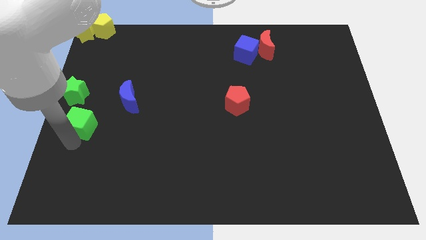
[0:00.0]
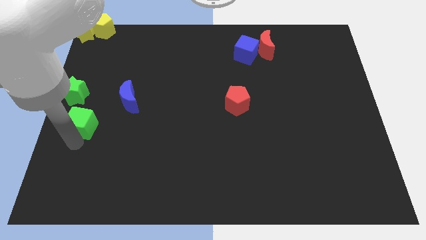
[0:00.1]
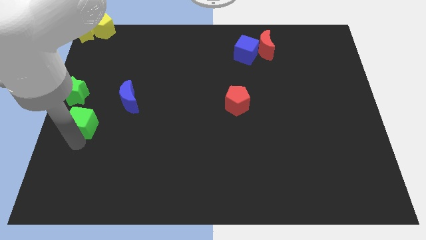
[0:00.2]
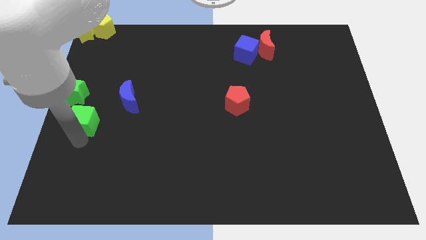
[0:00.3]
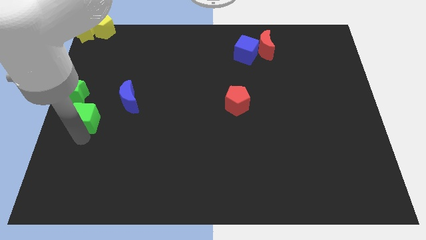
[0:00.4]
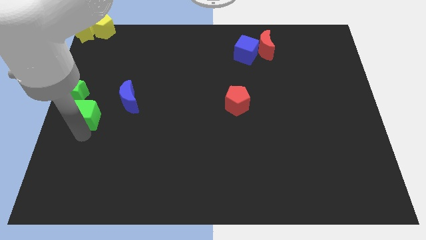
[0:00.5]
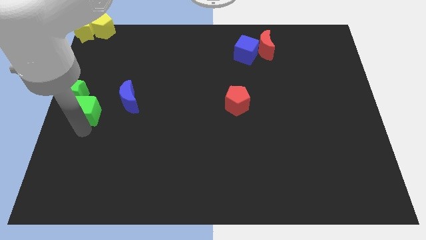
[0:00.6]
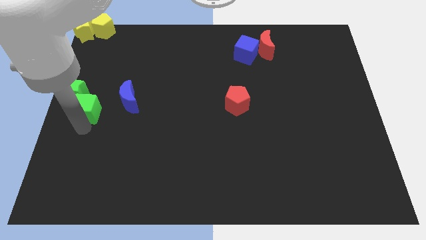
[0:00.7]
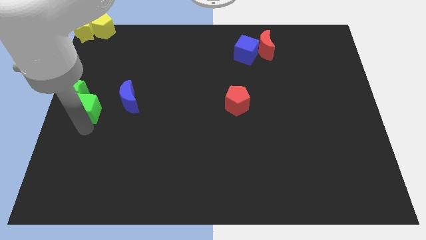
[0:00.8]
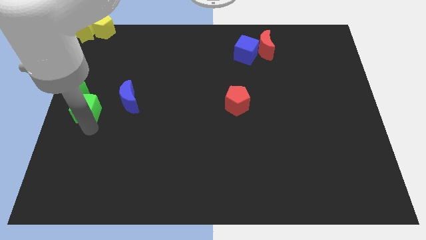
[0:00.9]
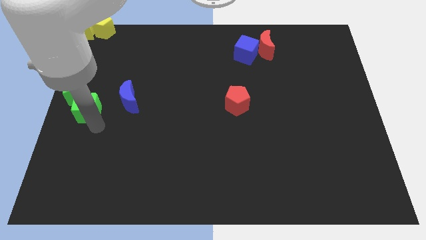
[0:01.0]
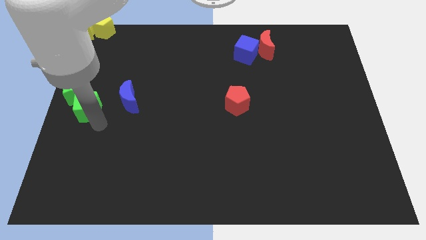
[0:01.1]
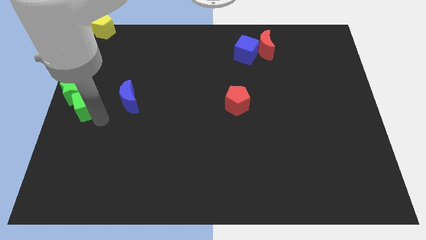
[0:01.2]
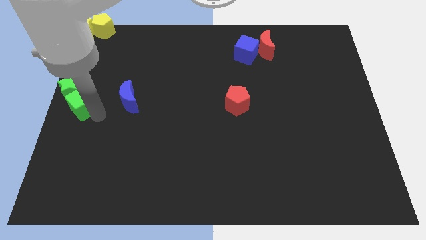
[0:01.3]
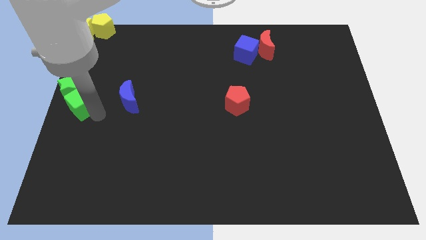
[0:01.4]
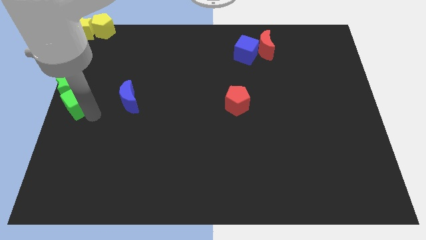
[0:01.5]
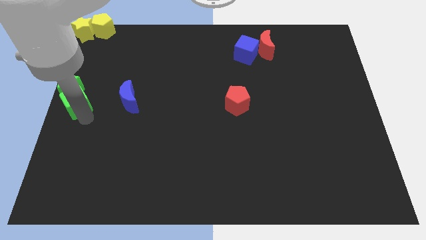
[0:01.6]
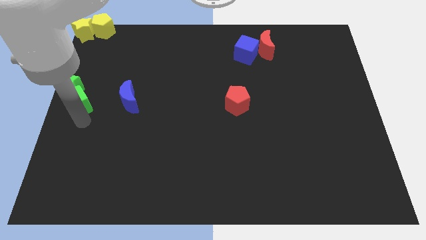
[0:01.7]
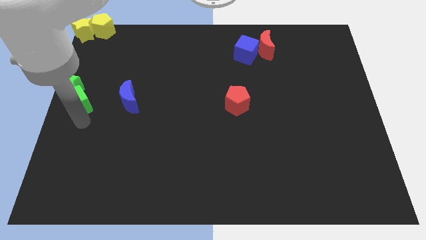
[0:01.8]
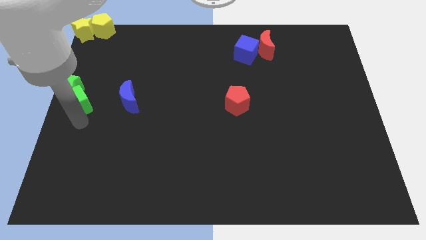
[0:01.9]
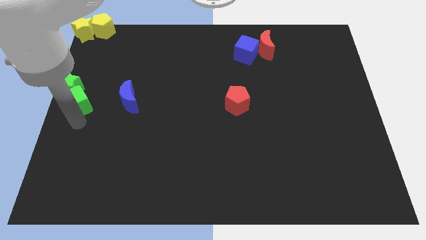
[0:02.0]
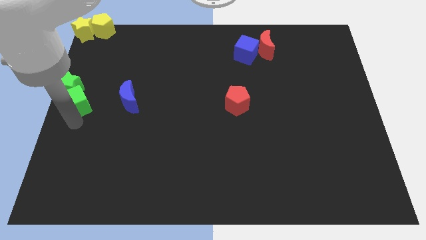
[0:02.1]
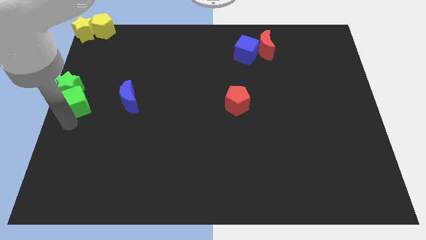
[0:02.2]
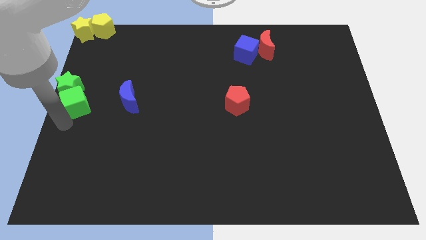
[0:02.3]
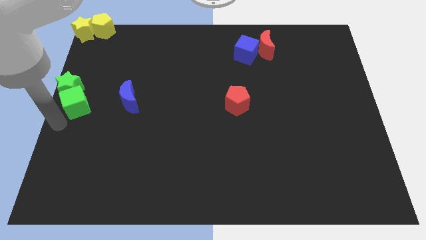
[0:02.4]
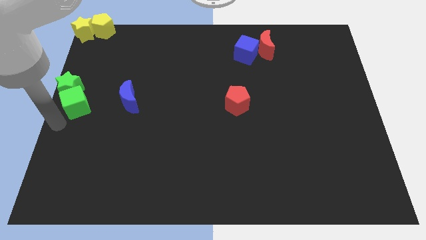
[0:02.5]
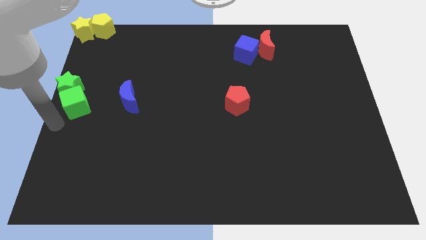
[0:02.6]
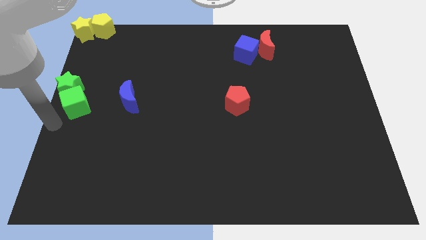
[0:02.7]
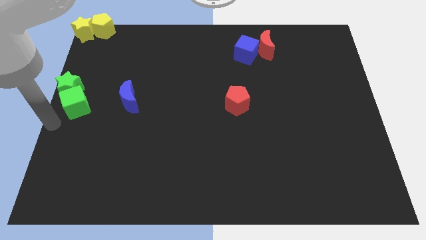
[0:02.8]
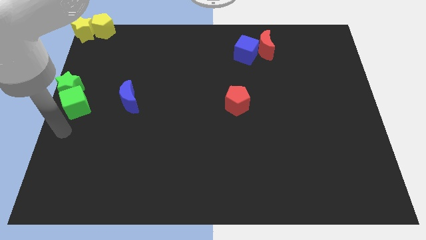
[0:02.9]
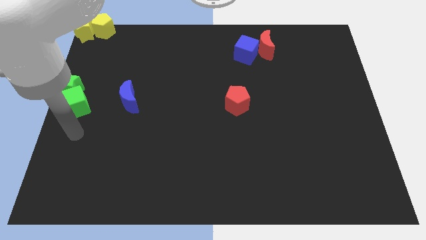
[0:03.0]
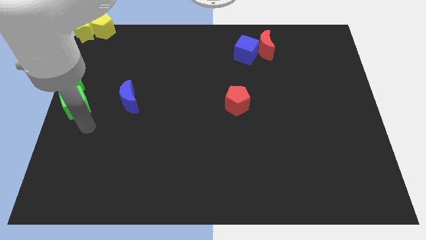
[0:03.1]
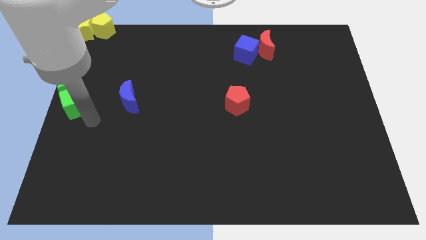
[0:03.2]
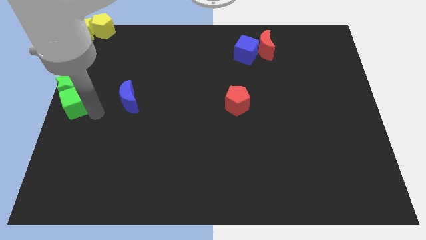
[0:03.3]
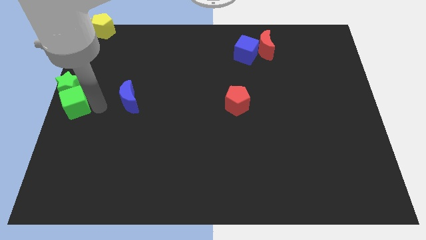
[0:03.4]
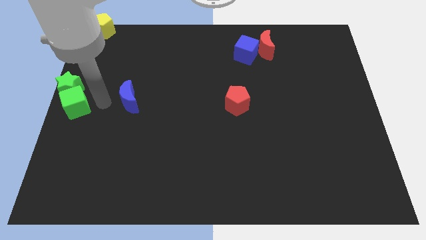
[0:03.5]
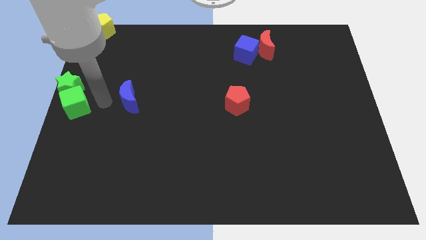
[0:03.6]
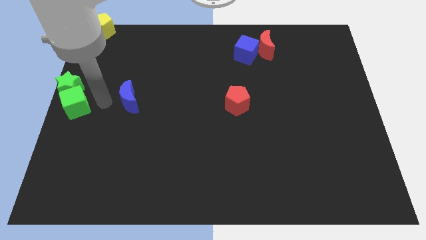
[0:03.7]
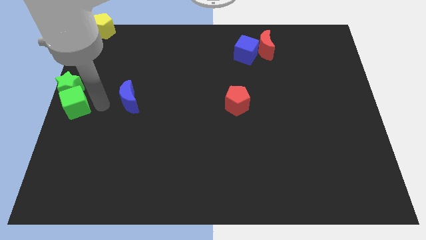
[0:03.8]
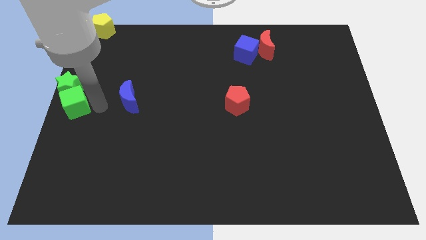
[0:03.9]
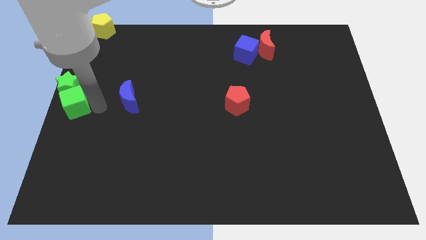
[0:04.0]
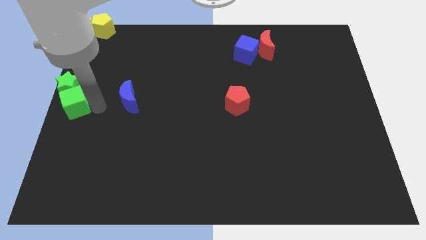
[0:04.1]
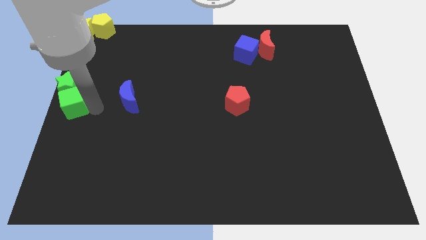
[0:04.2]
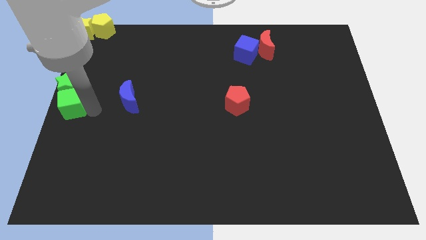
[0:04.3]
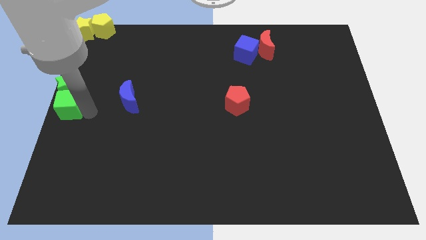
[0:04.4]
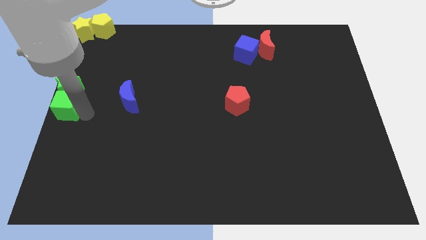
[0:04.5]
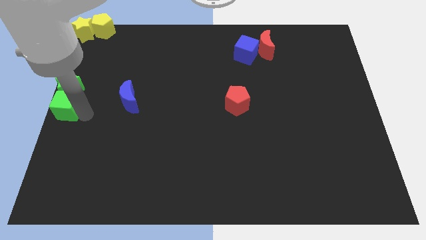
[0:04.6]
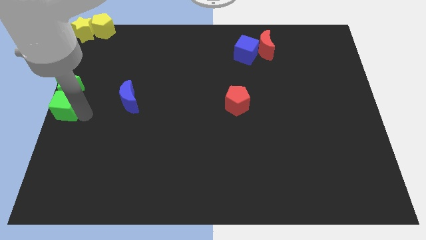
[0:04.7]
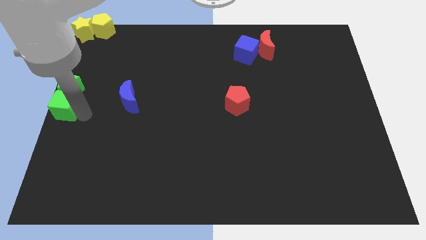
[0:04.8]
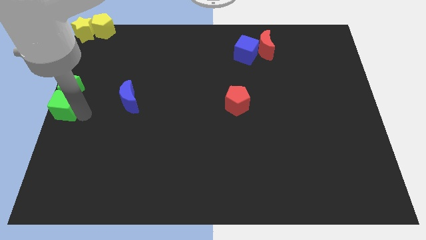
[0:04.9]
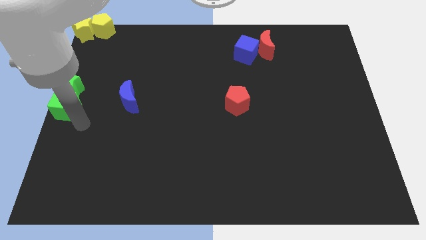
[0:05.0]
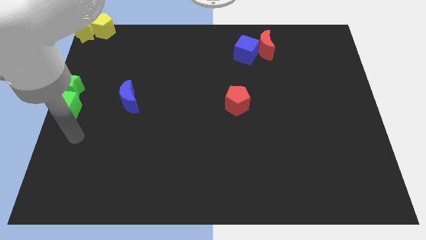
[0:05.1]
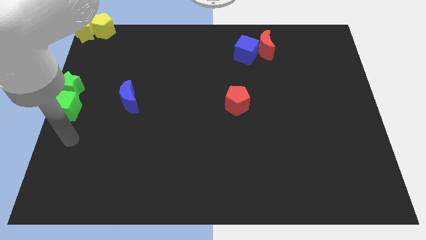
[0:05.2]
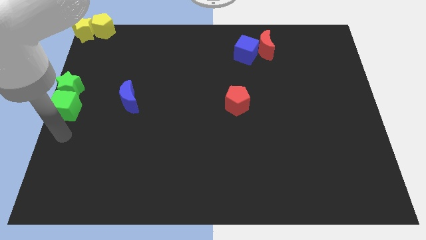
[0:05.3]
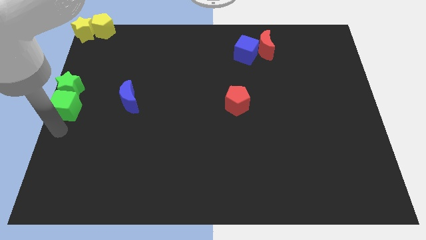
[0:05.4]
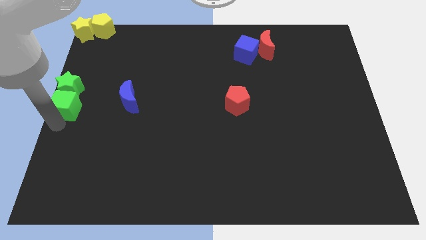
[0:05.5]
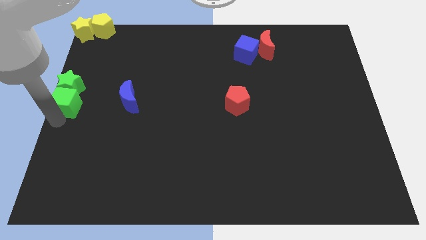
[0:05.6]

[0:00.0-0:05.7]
move the green cube at the bottom of the green star green star

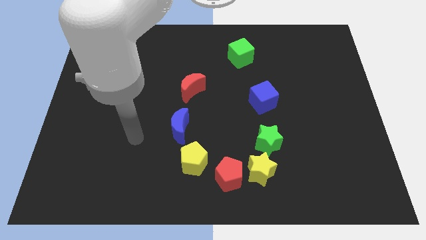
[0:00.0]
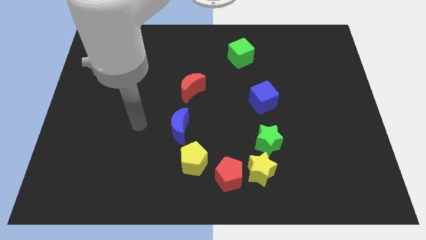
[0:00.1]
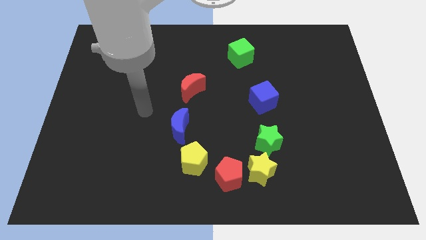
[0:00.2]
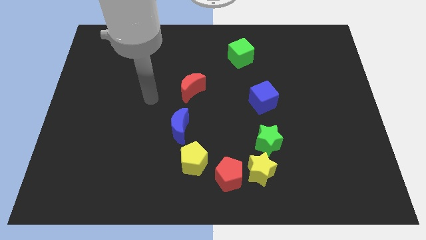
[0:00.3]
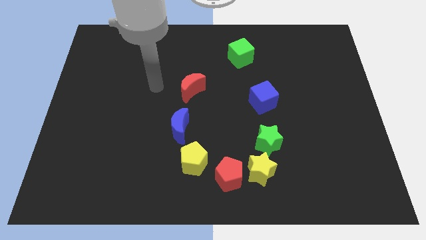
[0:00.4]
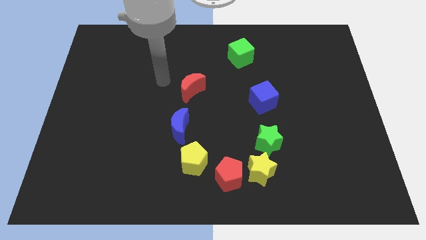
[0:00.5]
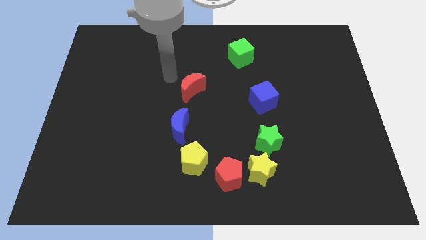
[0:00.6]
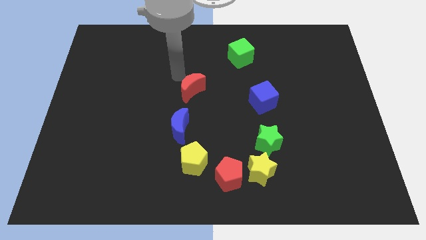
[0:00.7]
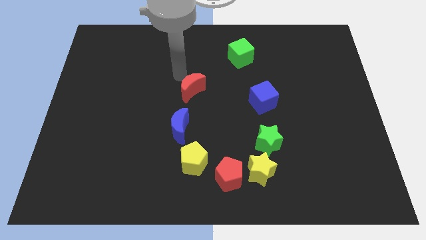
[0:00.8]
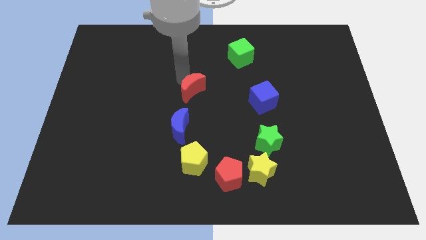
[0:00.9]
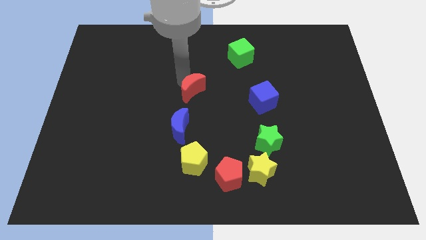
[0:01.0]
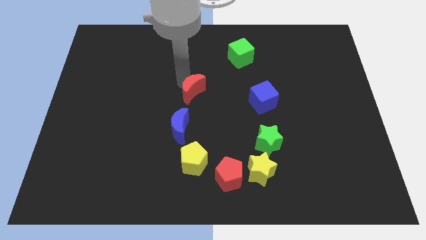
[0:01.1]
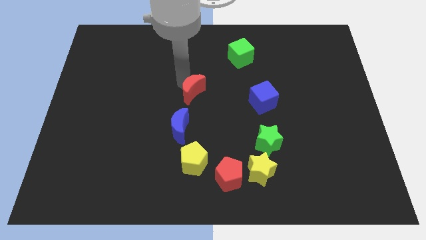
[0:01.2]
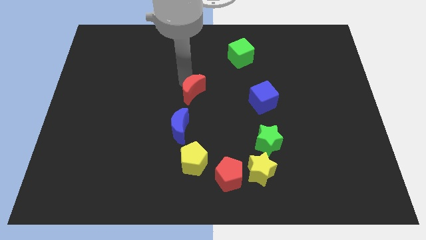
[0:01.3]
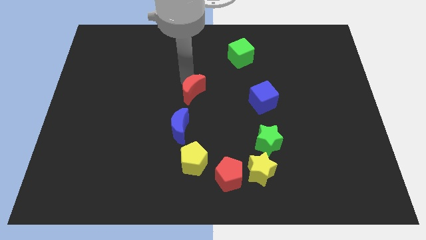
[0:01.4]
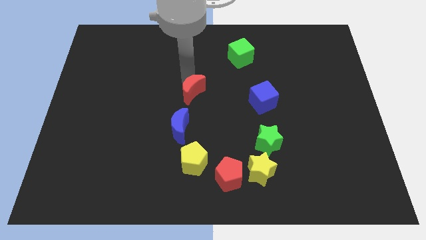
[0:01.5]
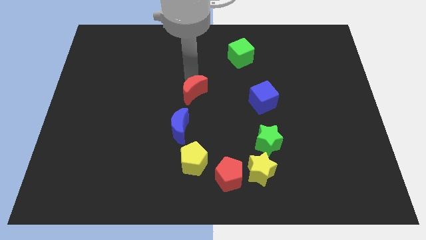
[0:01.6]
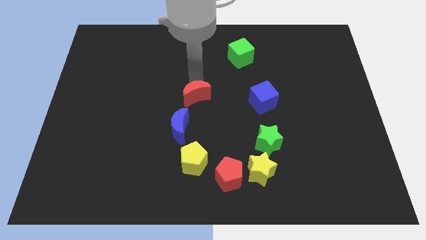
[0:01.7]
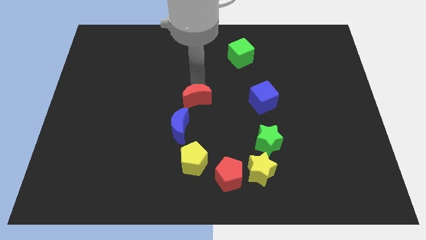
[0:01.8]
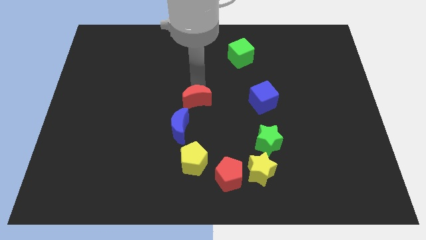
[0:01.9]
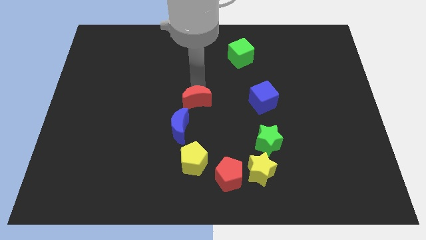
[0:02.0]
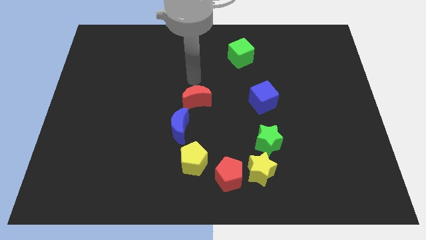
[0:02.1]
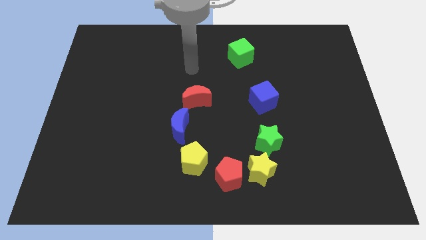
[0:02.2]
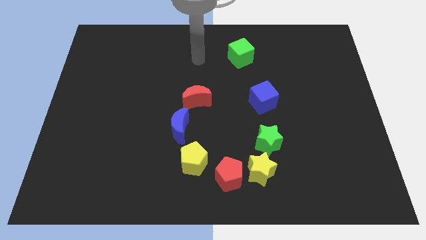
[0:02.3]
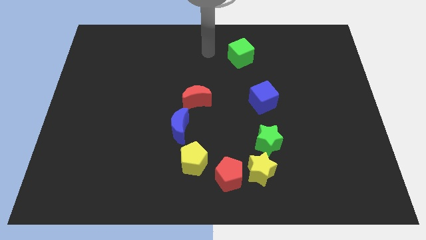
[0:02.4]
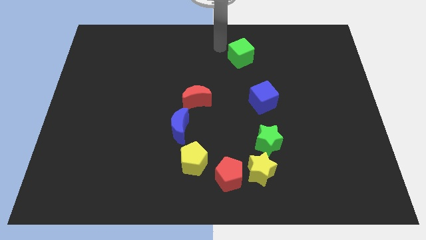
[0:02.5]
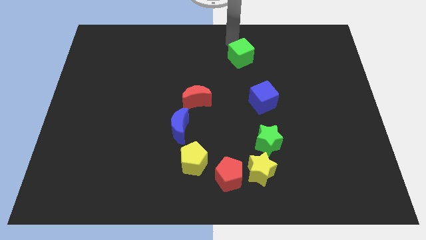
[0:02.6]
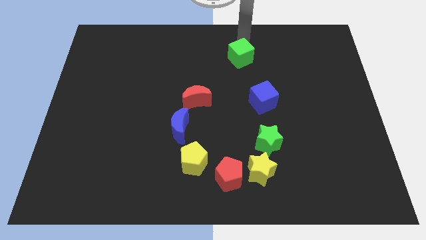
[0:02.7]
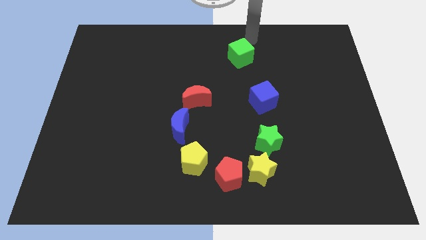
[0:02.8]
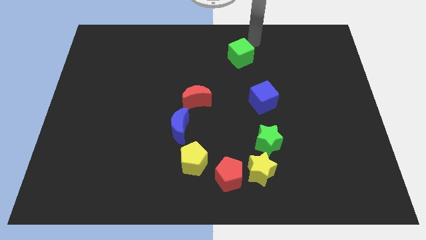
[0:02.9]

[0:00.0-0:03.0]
move the red crescent slightly close to the blue moon

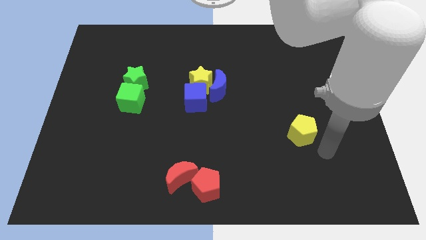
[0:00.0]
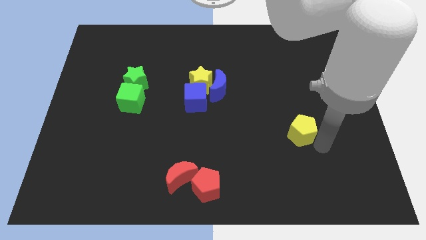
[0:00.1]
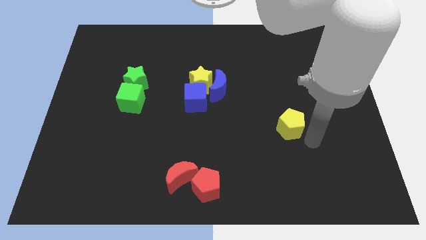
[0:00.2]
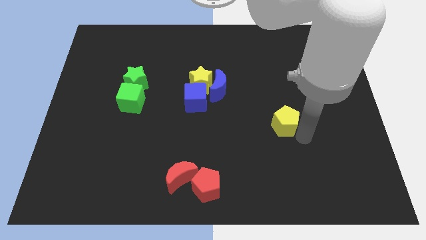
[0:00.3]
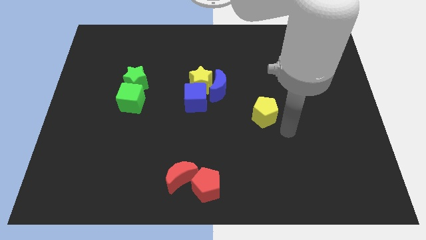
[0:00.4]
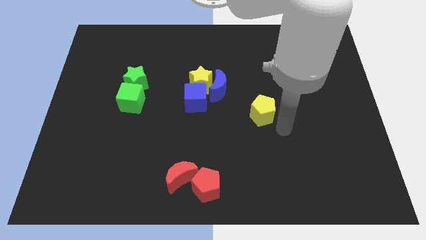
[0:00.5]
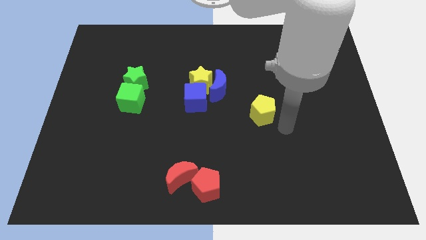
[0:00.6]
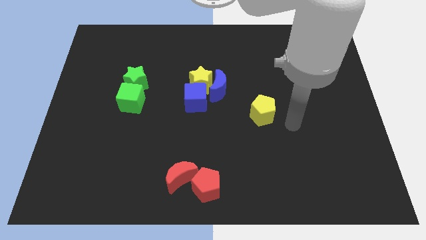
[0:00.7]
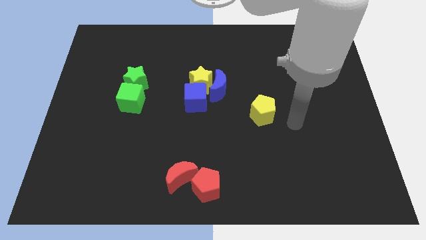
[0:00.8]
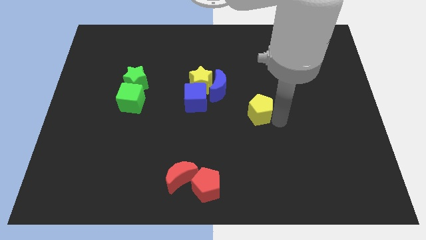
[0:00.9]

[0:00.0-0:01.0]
push the yellow pentagon towards the blue crescent
